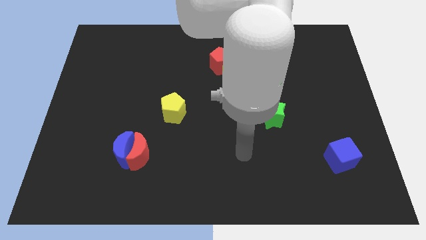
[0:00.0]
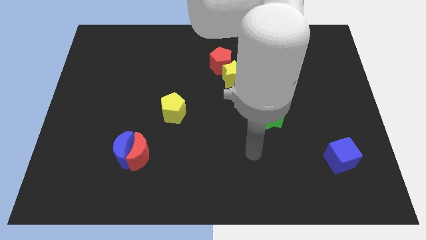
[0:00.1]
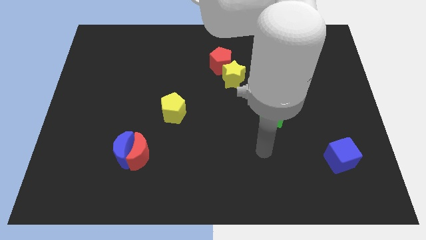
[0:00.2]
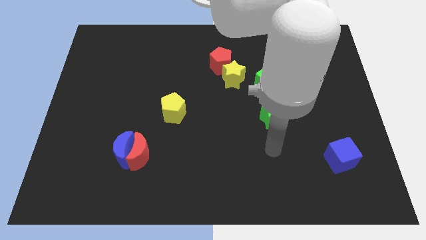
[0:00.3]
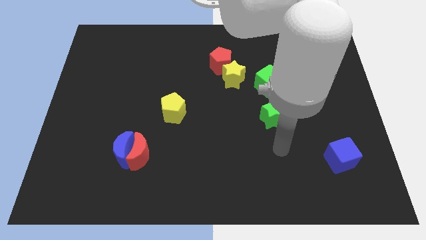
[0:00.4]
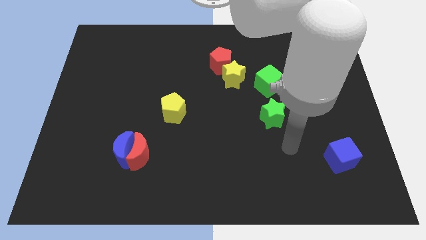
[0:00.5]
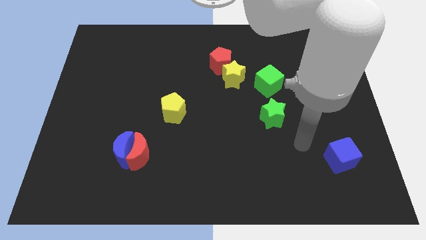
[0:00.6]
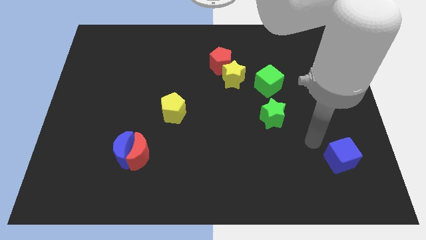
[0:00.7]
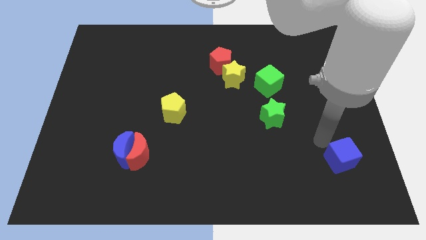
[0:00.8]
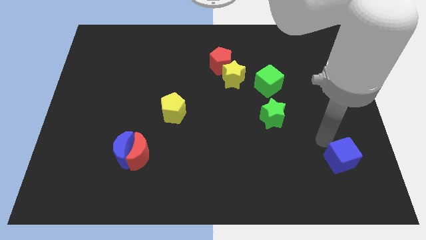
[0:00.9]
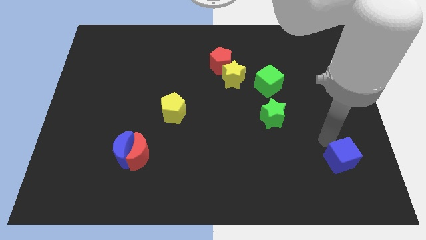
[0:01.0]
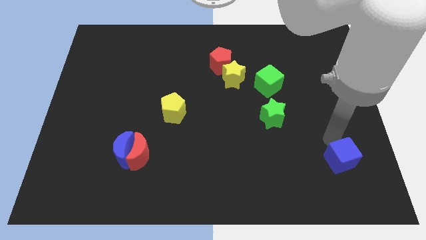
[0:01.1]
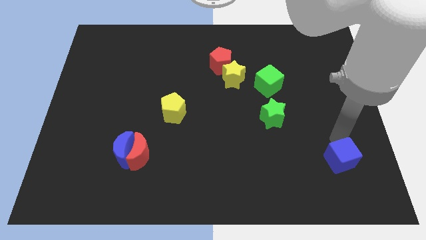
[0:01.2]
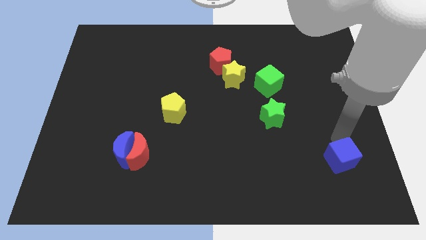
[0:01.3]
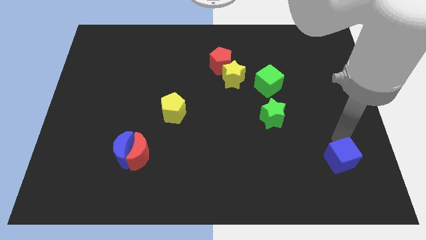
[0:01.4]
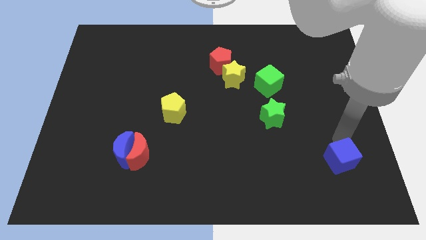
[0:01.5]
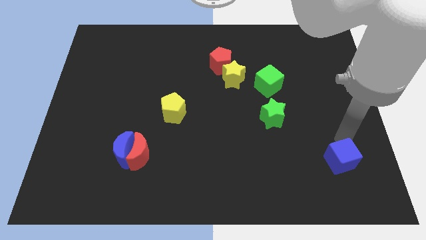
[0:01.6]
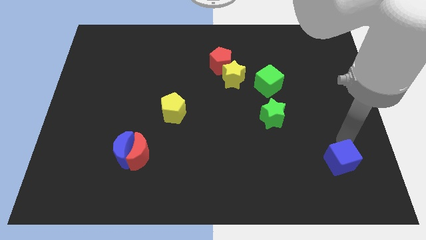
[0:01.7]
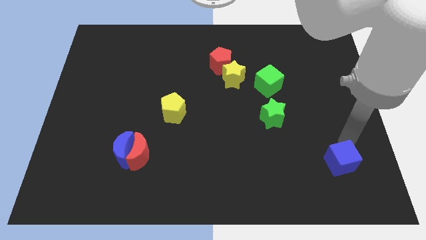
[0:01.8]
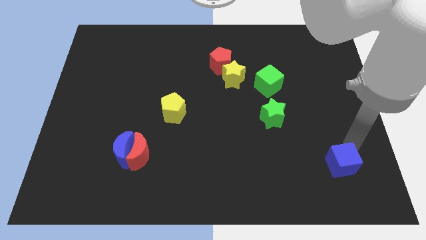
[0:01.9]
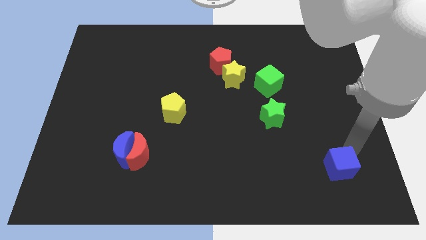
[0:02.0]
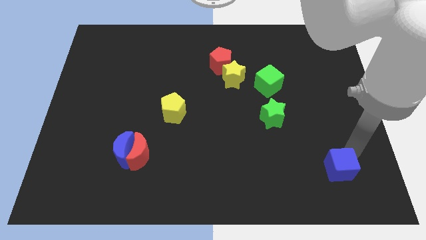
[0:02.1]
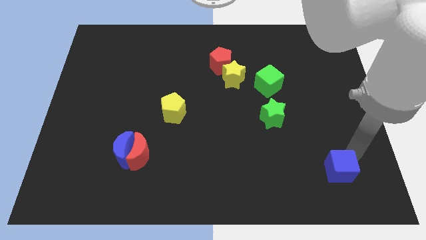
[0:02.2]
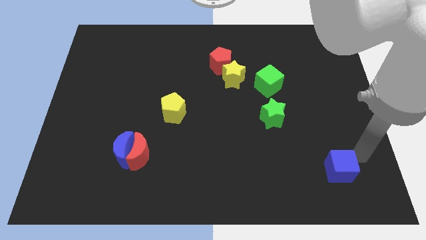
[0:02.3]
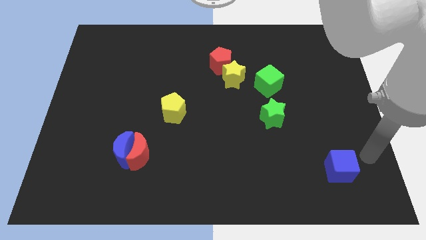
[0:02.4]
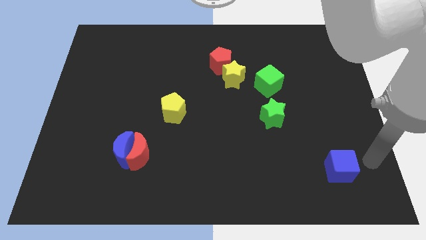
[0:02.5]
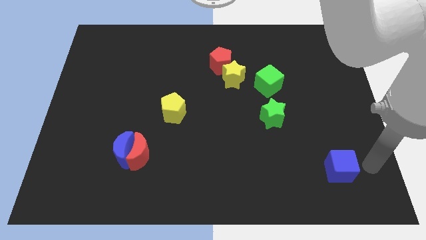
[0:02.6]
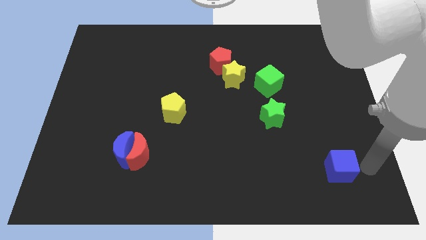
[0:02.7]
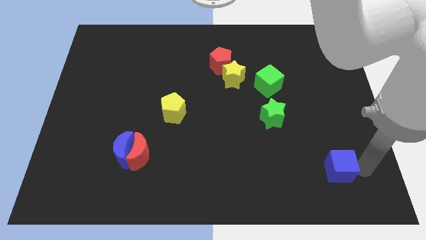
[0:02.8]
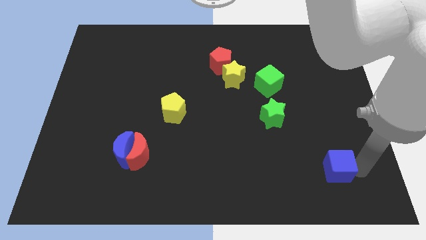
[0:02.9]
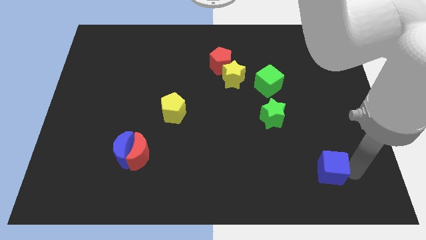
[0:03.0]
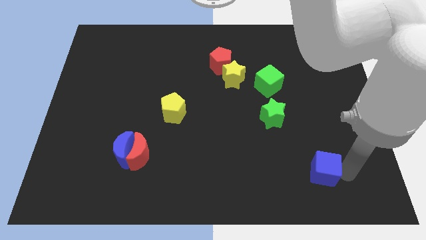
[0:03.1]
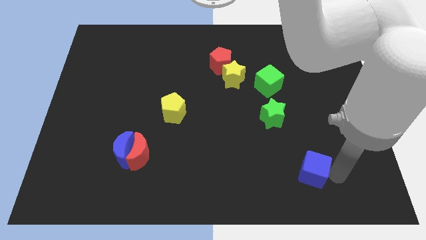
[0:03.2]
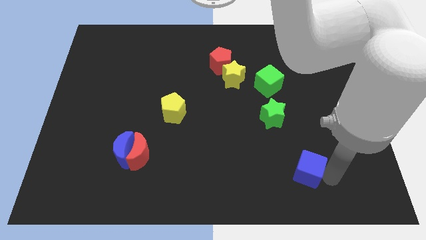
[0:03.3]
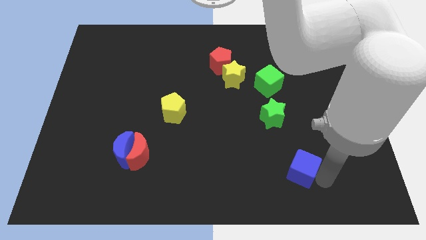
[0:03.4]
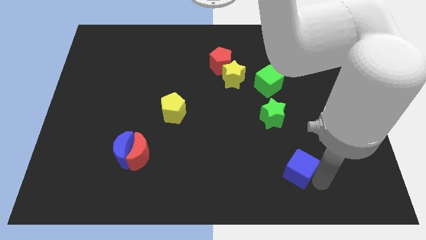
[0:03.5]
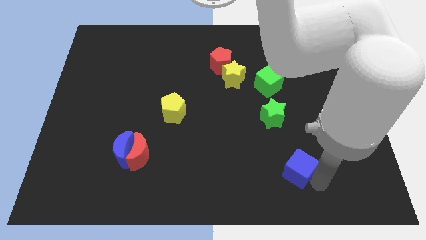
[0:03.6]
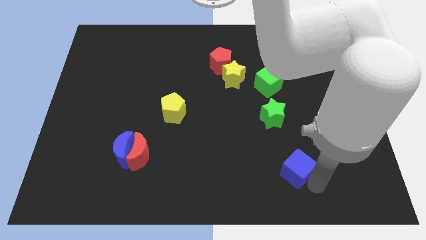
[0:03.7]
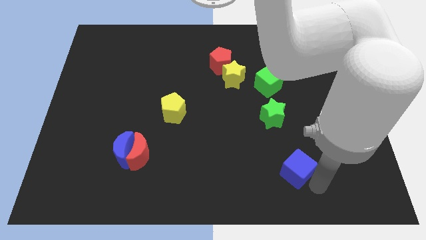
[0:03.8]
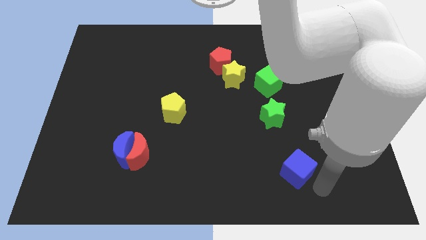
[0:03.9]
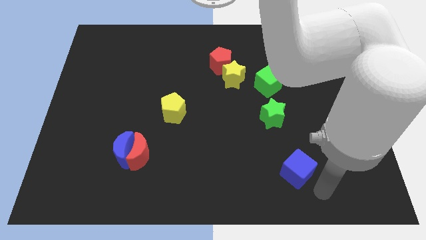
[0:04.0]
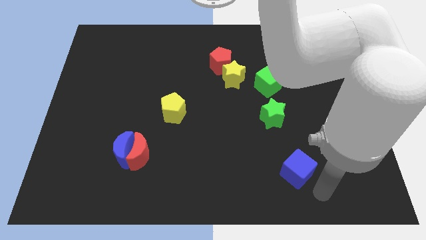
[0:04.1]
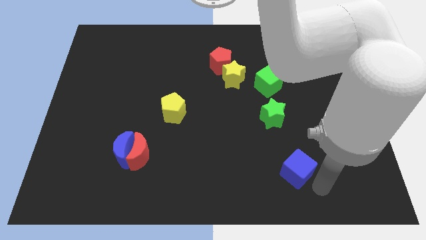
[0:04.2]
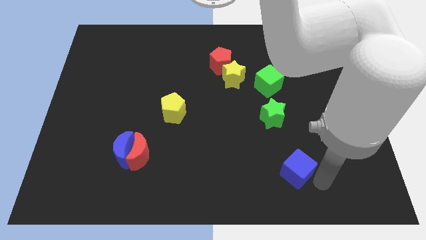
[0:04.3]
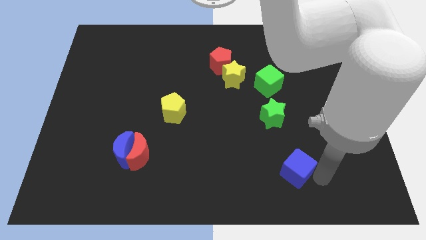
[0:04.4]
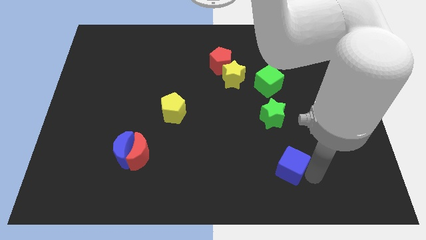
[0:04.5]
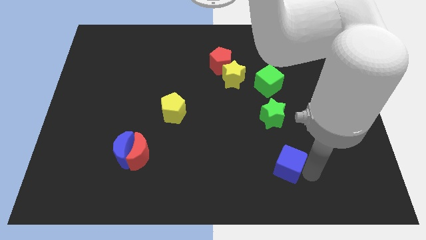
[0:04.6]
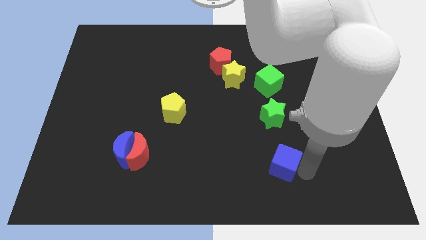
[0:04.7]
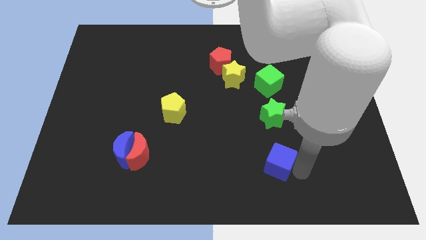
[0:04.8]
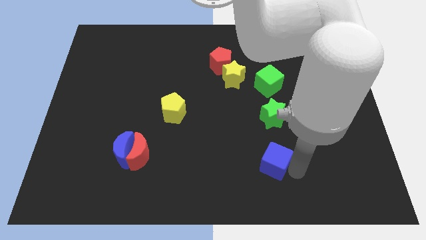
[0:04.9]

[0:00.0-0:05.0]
put the blue cube vertically below to the green star

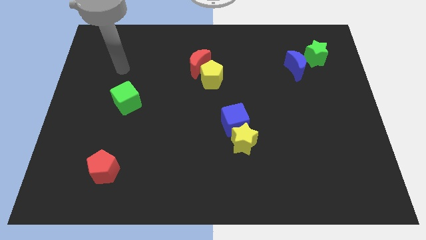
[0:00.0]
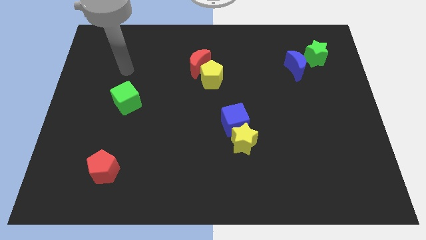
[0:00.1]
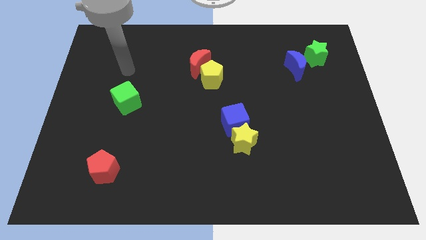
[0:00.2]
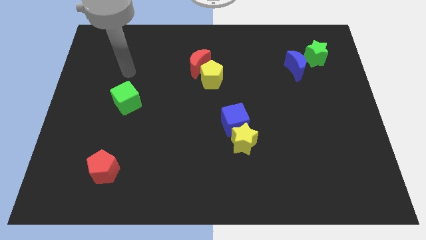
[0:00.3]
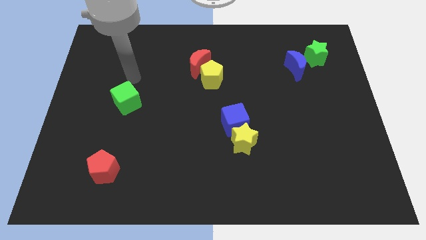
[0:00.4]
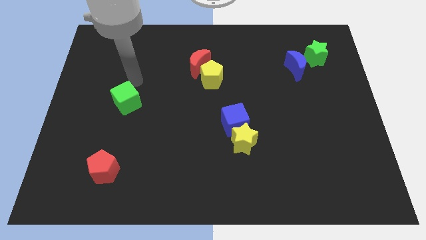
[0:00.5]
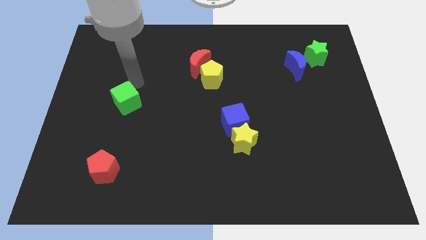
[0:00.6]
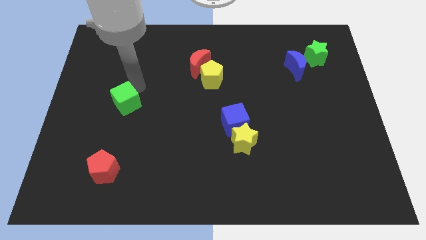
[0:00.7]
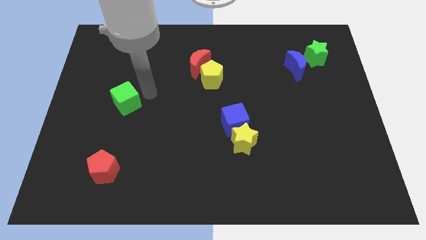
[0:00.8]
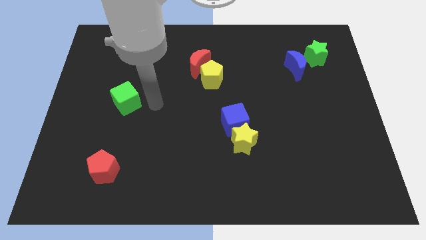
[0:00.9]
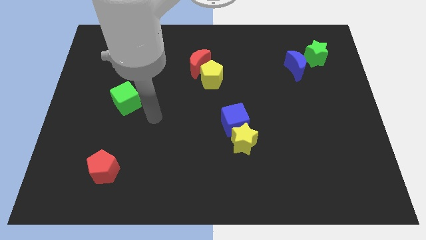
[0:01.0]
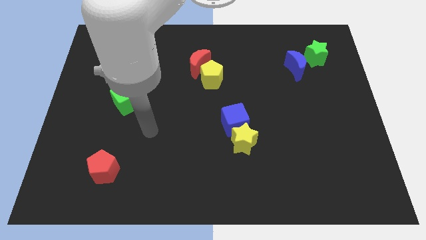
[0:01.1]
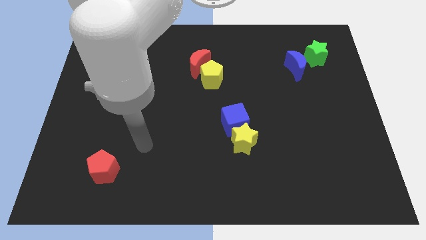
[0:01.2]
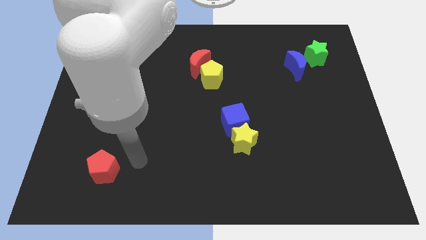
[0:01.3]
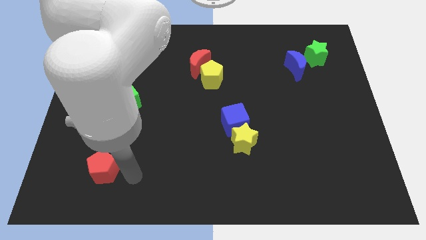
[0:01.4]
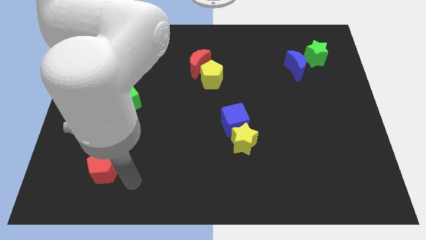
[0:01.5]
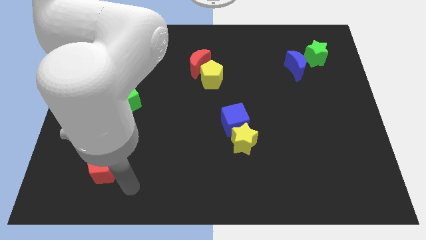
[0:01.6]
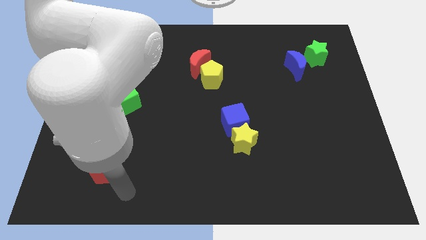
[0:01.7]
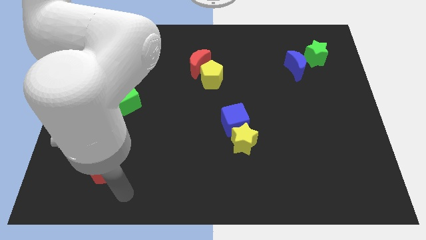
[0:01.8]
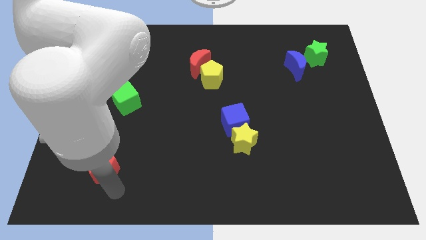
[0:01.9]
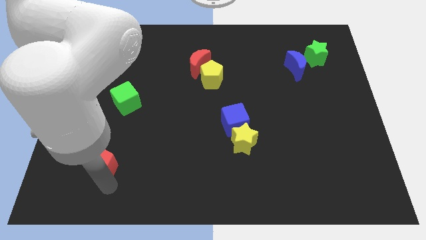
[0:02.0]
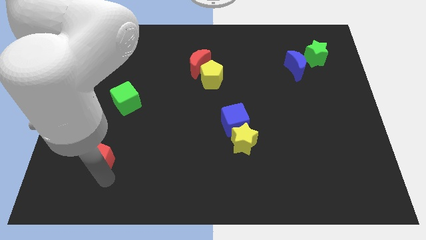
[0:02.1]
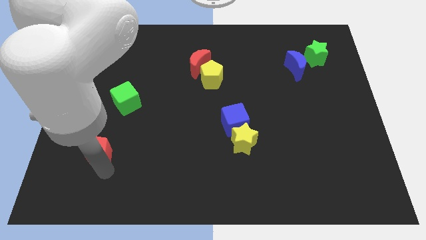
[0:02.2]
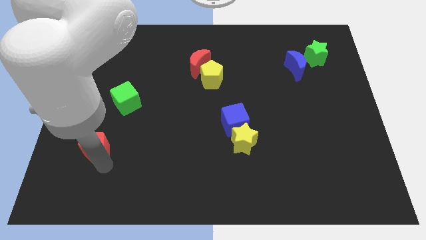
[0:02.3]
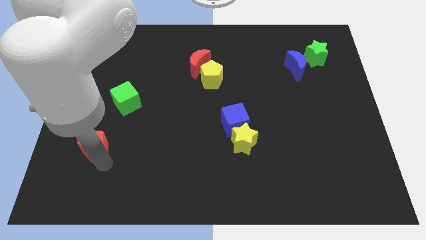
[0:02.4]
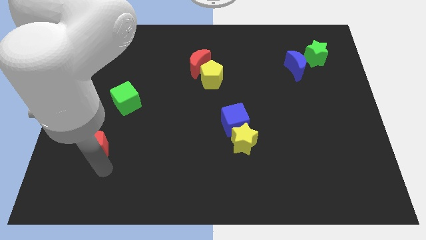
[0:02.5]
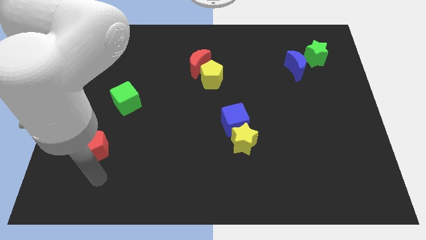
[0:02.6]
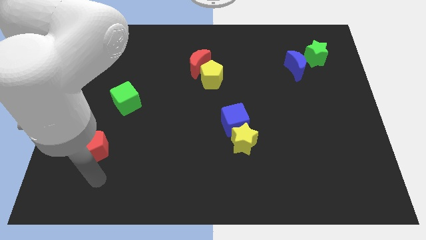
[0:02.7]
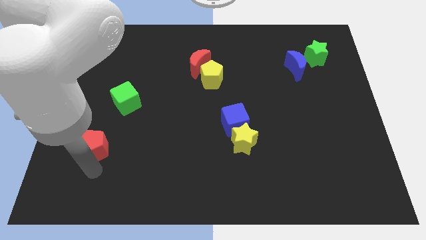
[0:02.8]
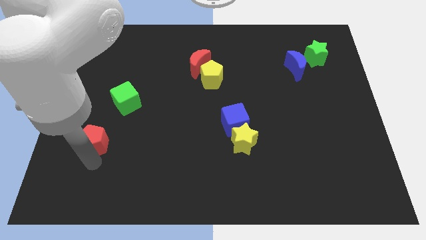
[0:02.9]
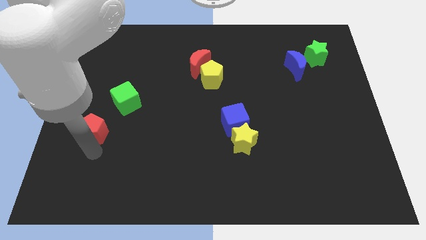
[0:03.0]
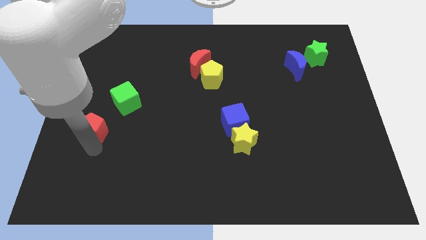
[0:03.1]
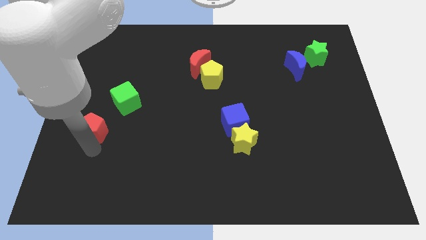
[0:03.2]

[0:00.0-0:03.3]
move the red pentagon upwards

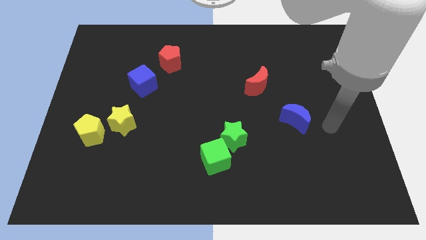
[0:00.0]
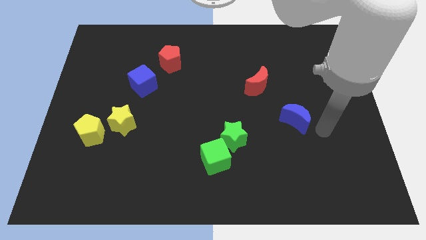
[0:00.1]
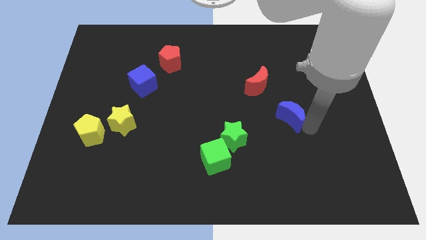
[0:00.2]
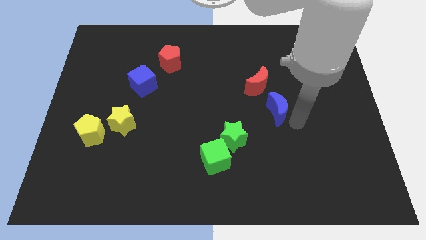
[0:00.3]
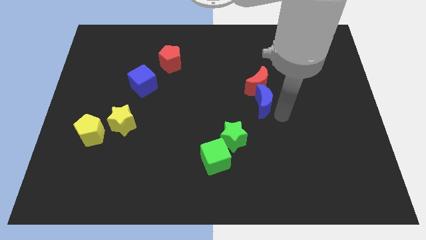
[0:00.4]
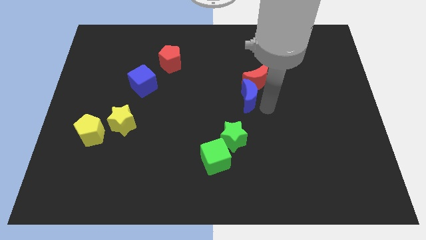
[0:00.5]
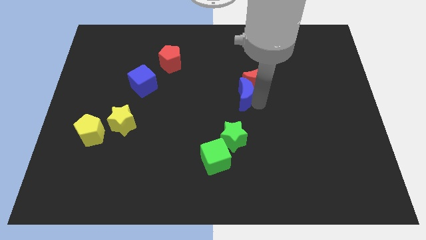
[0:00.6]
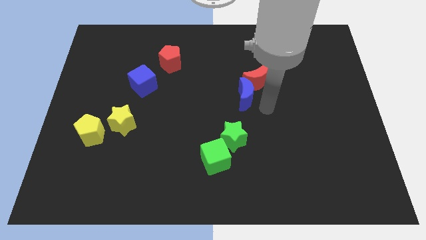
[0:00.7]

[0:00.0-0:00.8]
move the blue moon above the green star
